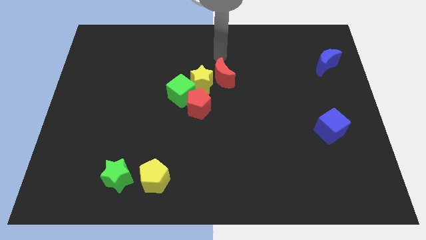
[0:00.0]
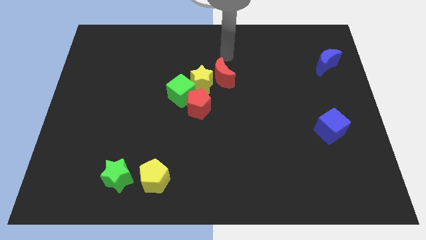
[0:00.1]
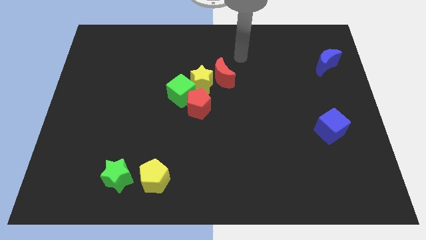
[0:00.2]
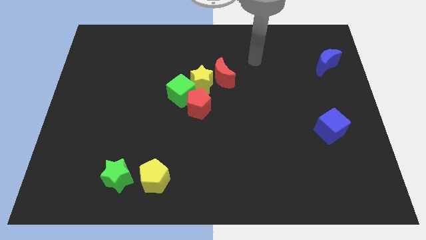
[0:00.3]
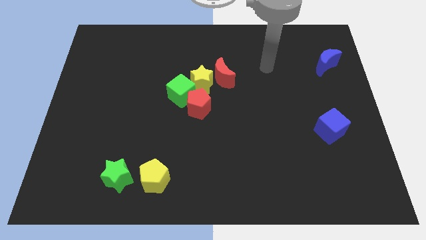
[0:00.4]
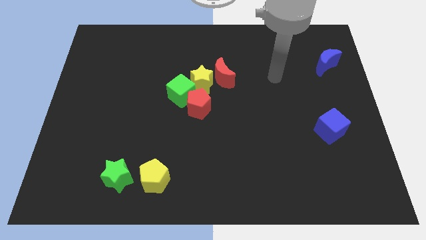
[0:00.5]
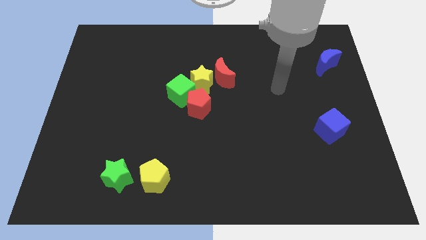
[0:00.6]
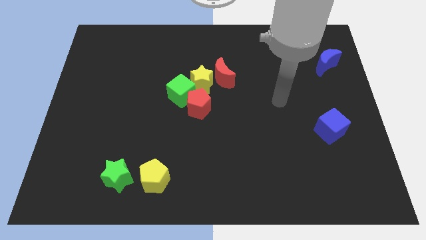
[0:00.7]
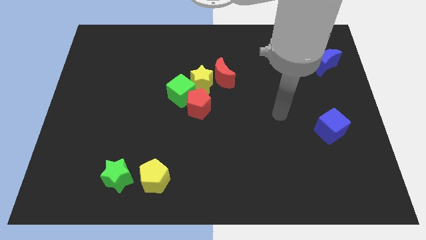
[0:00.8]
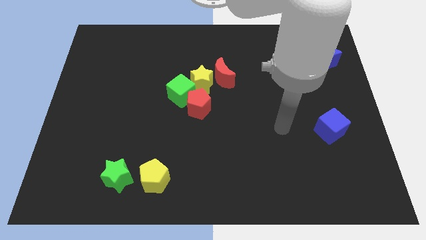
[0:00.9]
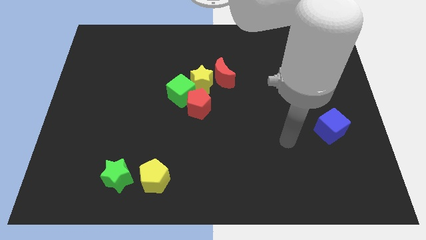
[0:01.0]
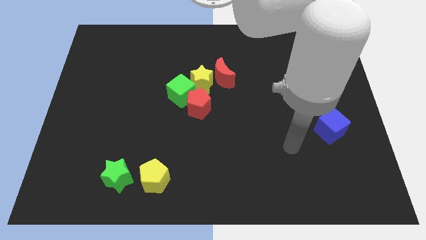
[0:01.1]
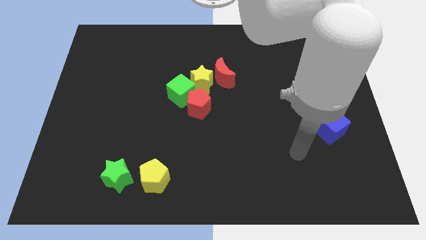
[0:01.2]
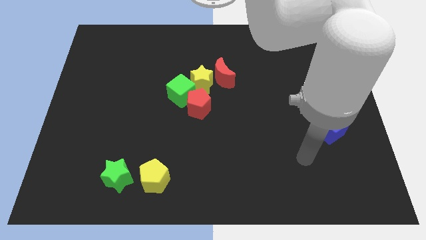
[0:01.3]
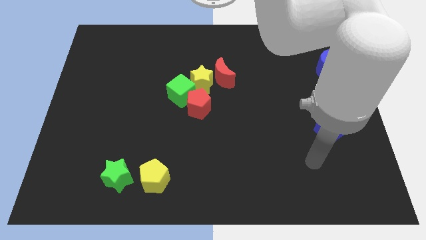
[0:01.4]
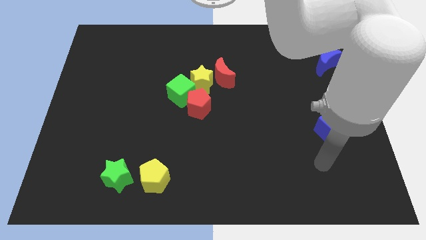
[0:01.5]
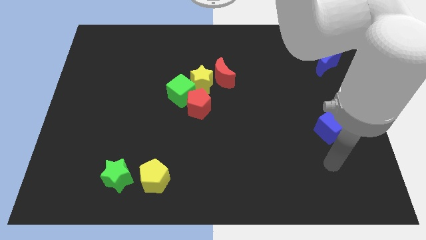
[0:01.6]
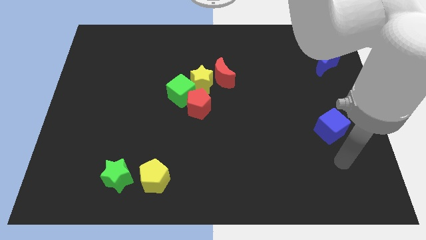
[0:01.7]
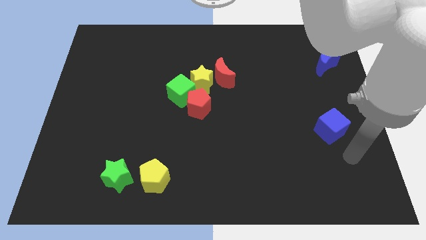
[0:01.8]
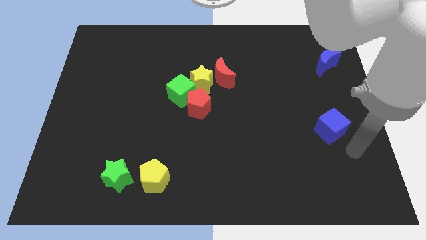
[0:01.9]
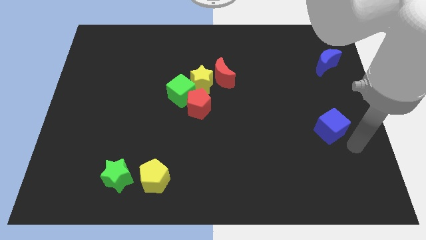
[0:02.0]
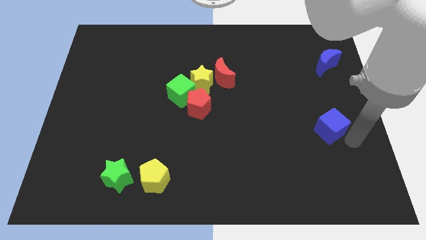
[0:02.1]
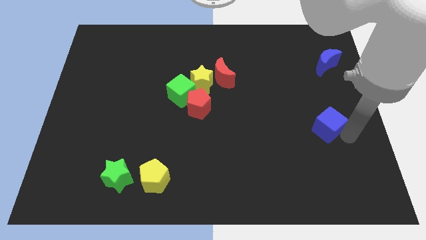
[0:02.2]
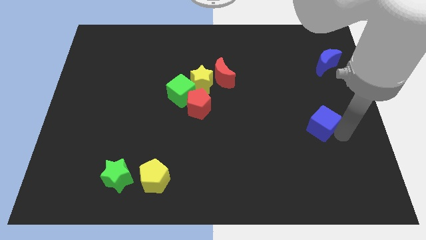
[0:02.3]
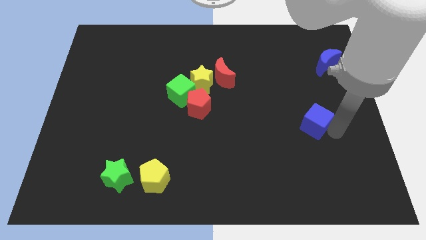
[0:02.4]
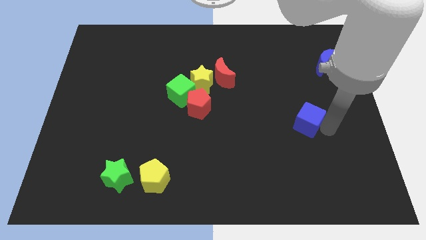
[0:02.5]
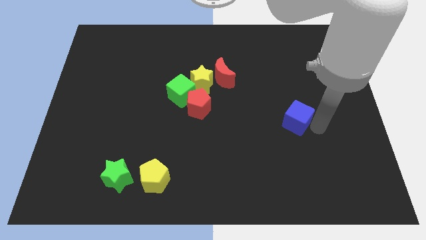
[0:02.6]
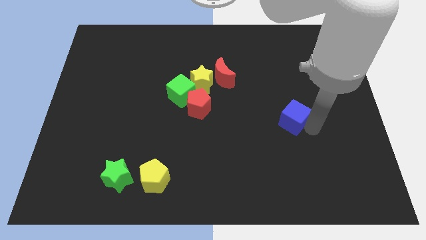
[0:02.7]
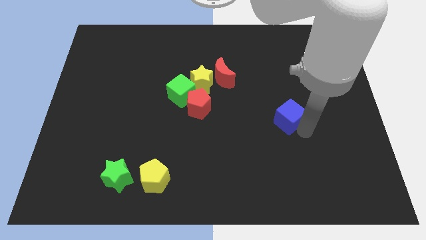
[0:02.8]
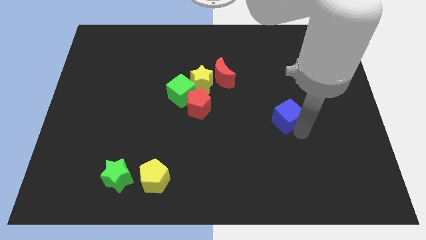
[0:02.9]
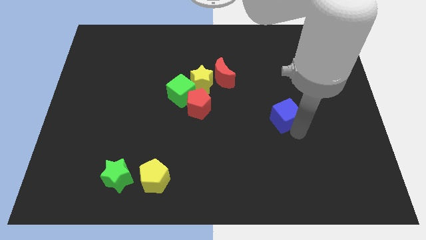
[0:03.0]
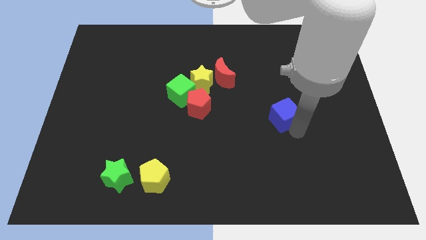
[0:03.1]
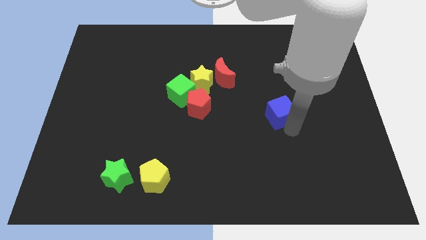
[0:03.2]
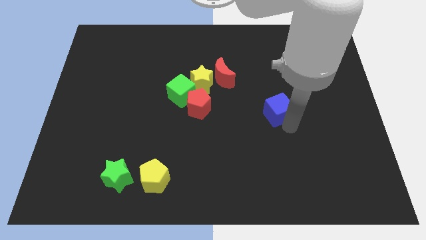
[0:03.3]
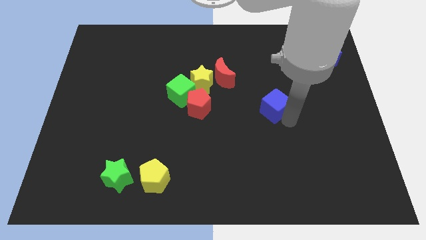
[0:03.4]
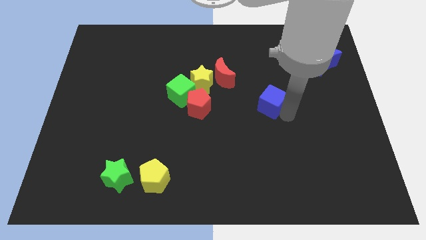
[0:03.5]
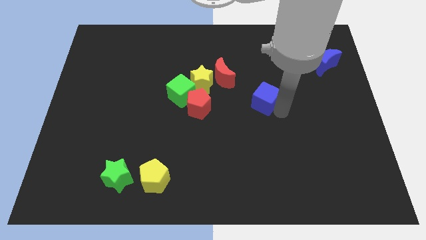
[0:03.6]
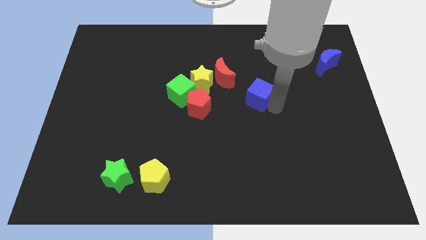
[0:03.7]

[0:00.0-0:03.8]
move the blue cube diagonally bottom right to the red moon

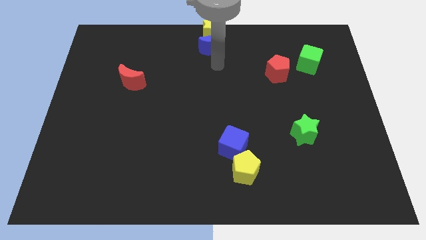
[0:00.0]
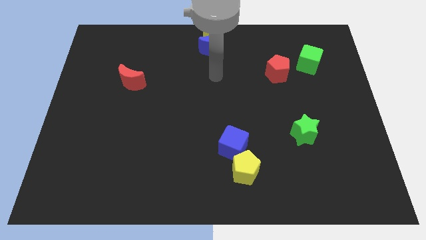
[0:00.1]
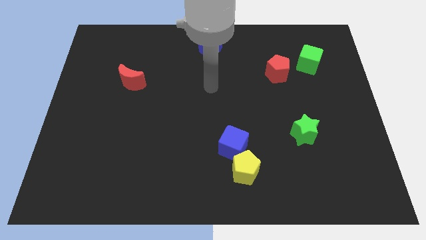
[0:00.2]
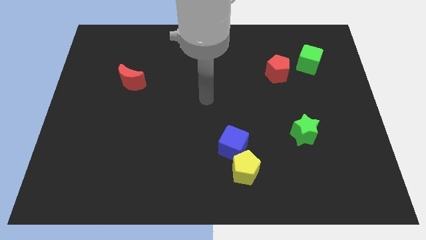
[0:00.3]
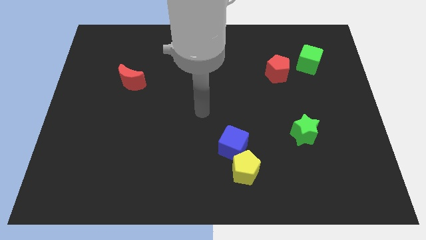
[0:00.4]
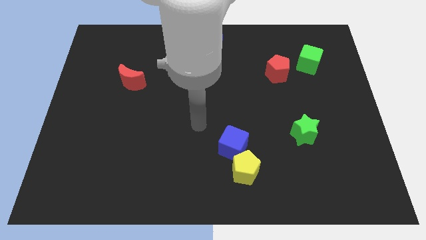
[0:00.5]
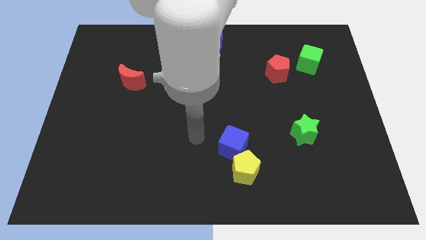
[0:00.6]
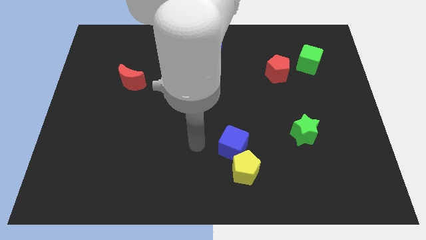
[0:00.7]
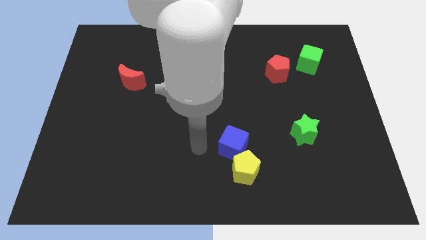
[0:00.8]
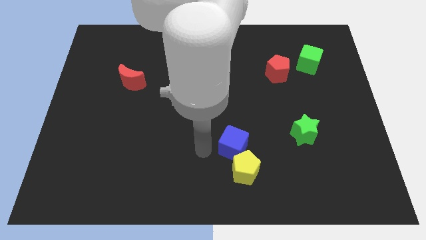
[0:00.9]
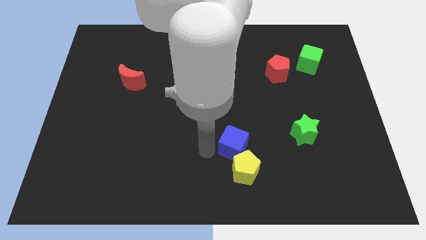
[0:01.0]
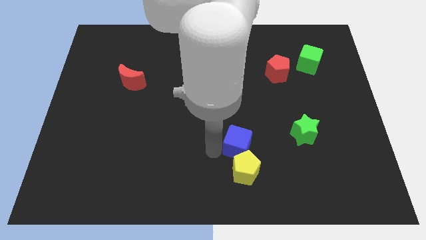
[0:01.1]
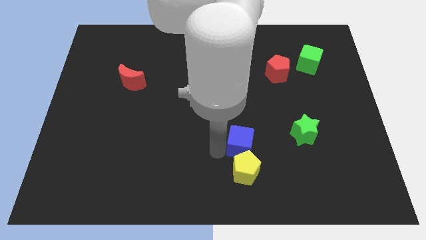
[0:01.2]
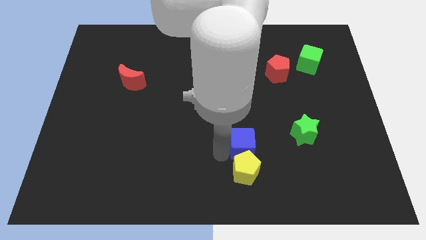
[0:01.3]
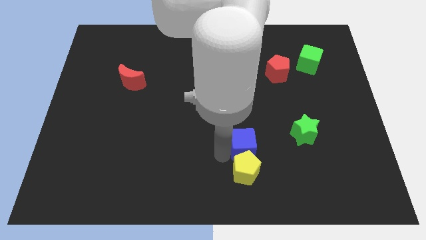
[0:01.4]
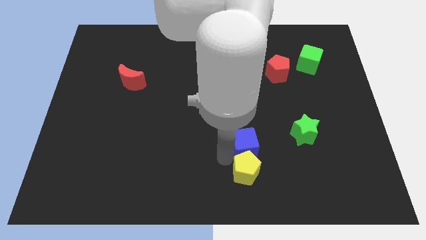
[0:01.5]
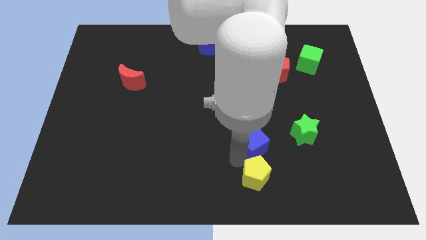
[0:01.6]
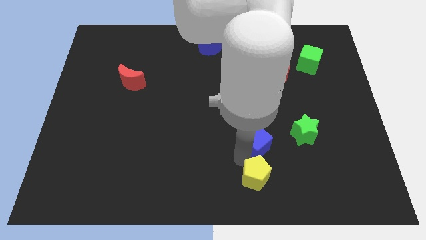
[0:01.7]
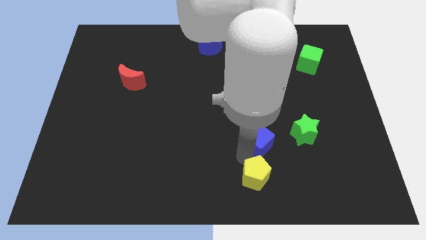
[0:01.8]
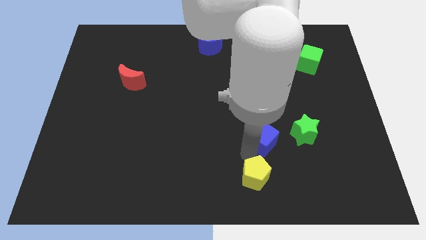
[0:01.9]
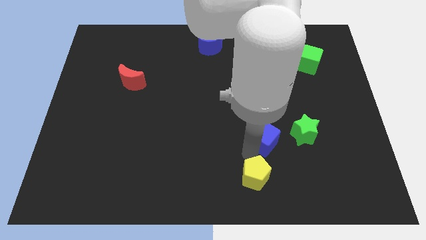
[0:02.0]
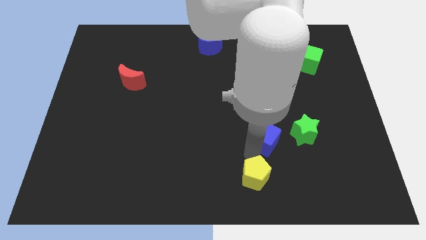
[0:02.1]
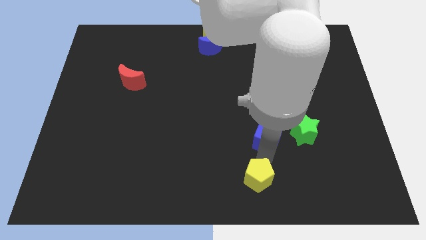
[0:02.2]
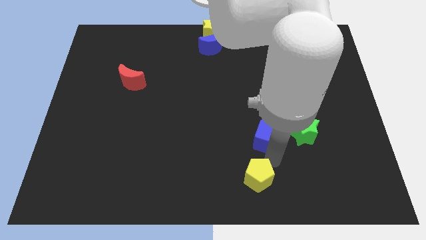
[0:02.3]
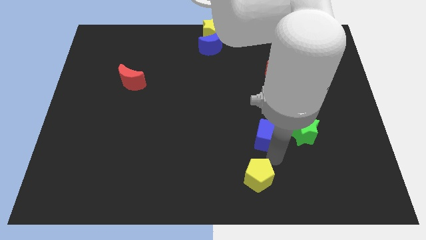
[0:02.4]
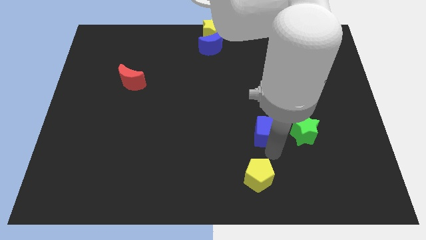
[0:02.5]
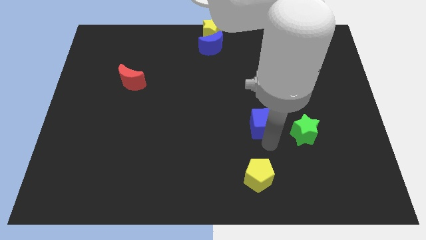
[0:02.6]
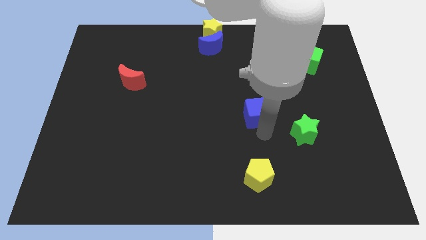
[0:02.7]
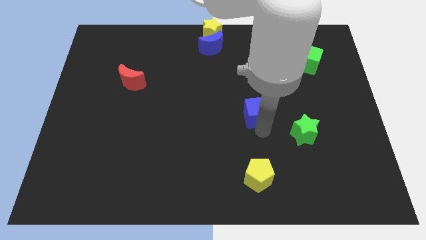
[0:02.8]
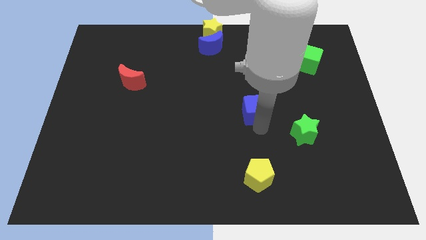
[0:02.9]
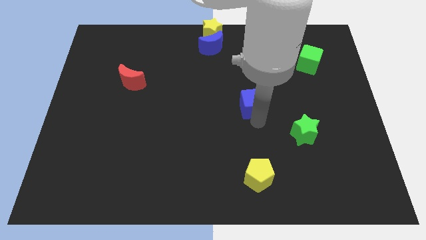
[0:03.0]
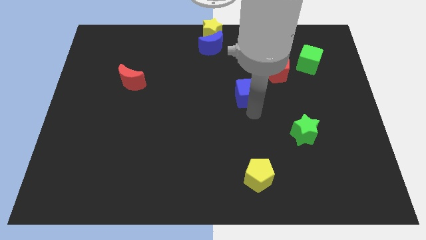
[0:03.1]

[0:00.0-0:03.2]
slide the blue cube diagonally top left to the green star

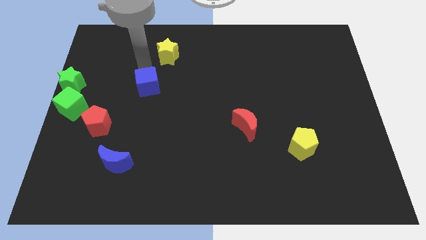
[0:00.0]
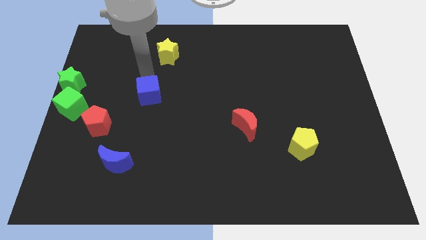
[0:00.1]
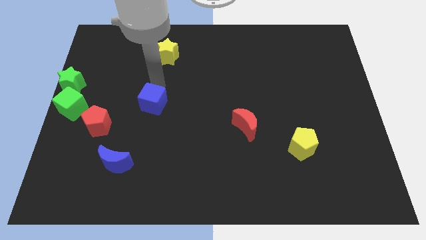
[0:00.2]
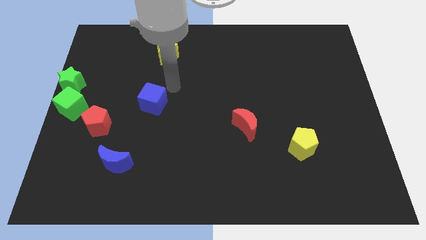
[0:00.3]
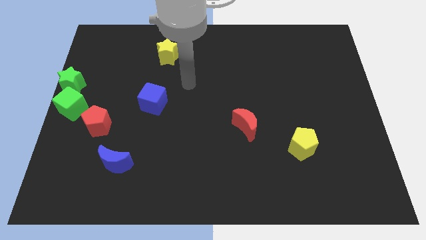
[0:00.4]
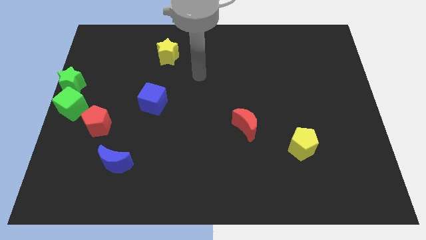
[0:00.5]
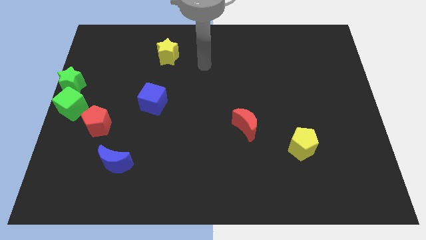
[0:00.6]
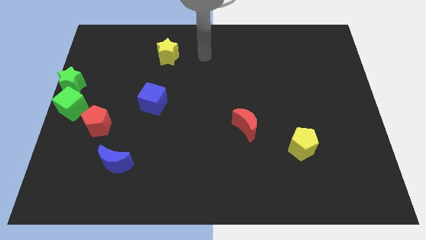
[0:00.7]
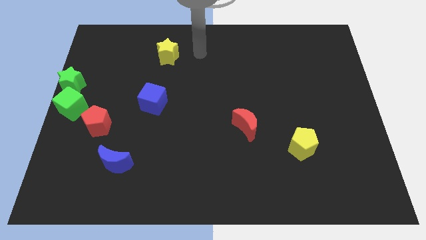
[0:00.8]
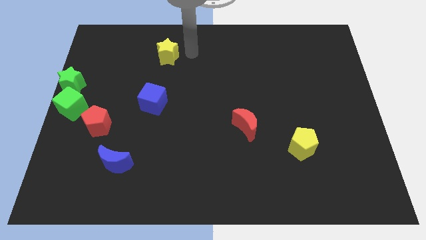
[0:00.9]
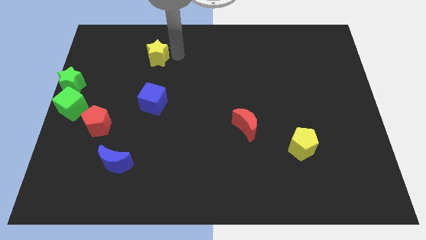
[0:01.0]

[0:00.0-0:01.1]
place the yellow star vertically above the blue cube

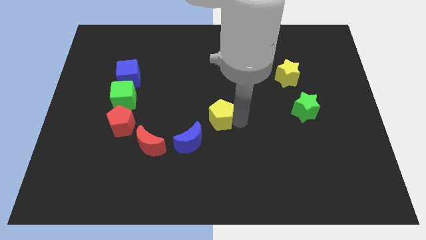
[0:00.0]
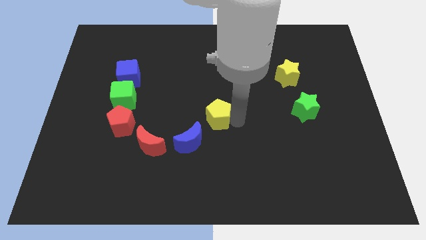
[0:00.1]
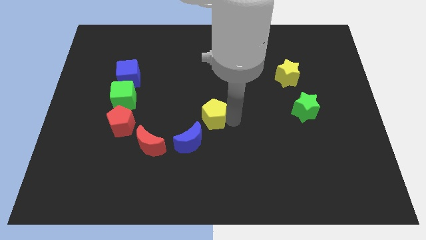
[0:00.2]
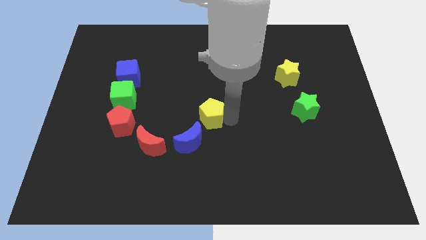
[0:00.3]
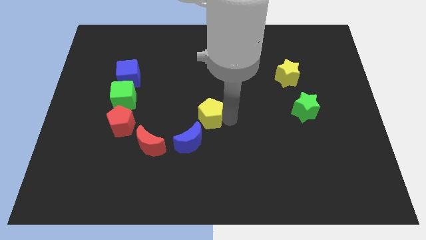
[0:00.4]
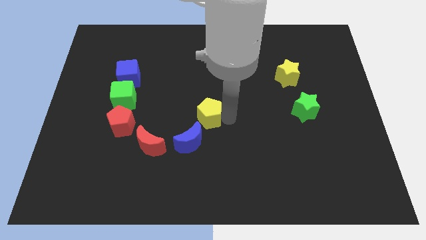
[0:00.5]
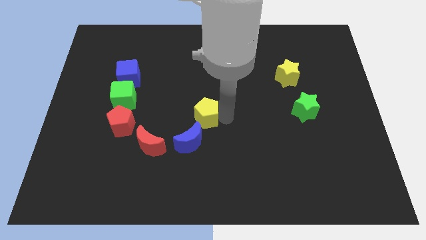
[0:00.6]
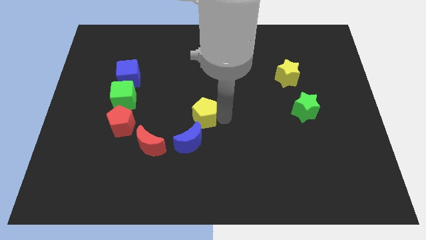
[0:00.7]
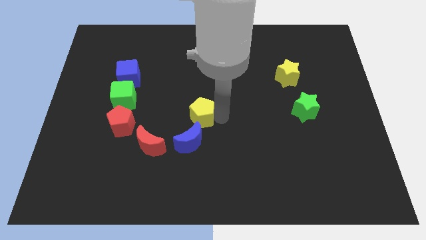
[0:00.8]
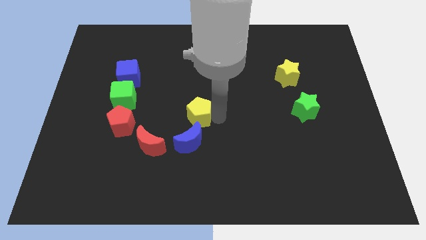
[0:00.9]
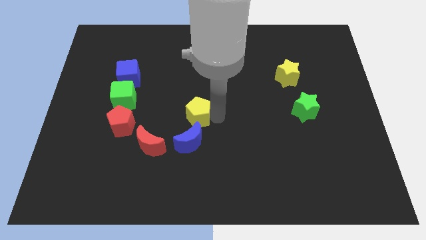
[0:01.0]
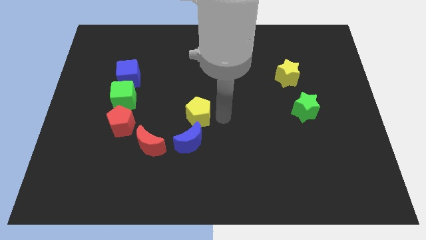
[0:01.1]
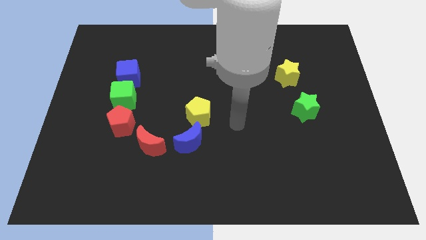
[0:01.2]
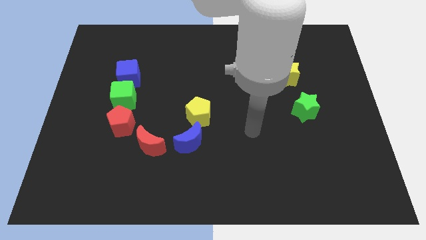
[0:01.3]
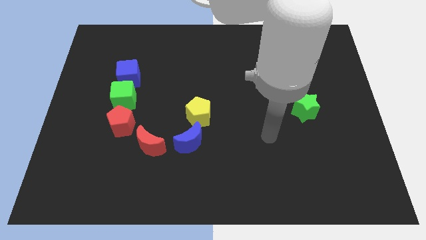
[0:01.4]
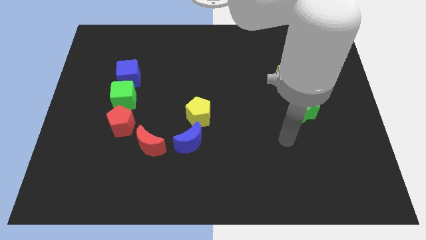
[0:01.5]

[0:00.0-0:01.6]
place yellow pentagon to the top of blue moon
